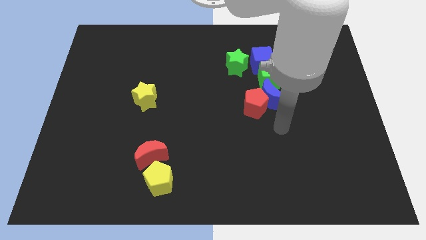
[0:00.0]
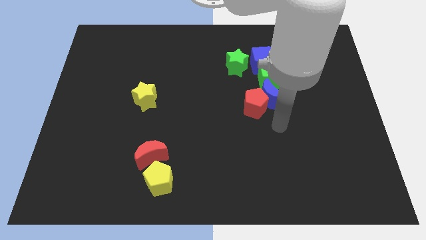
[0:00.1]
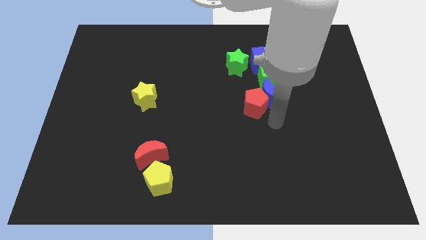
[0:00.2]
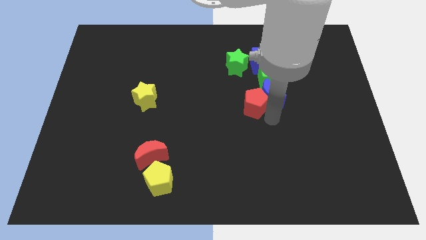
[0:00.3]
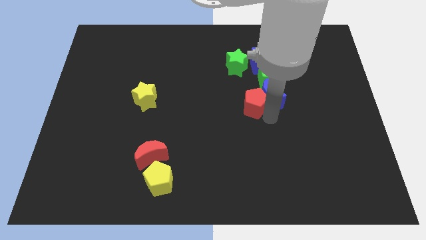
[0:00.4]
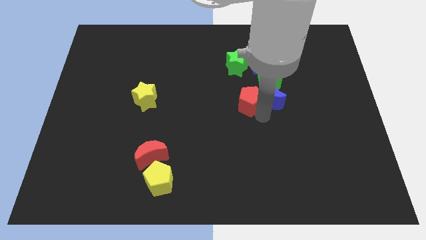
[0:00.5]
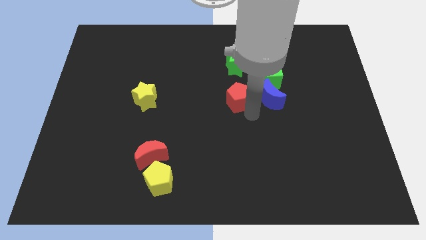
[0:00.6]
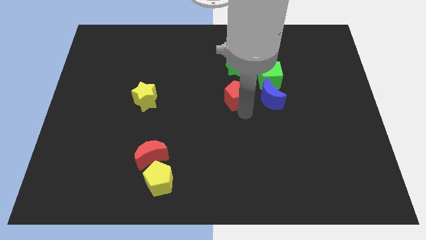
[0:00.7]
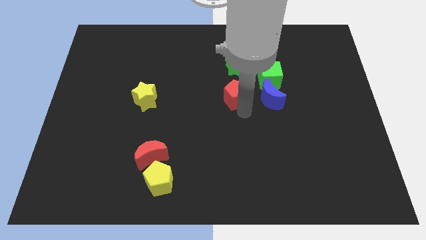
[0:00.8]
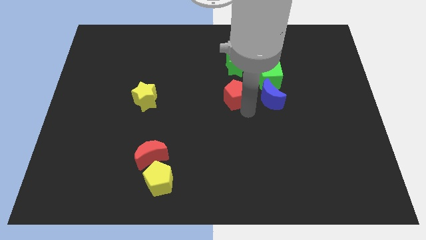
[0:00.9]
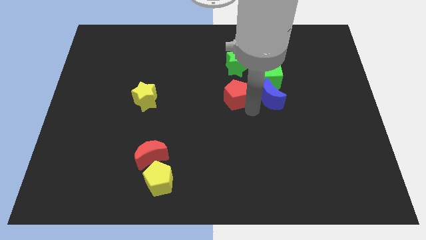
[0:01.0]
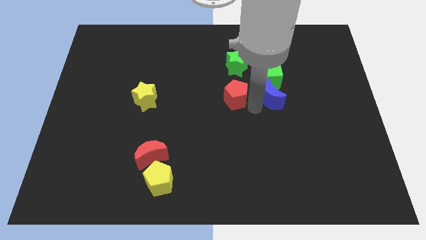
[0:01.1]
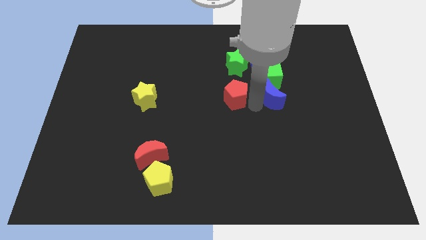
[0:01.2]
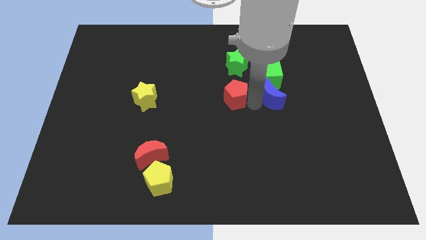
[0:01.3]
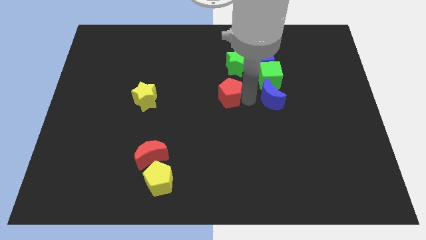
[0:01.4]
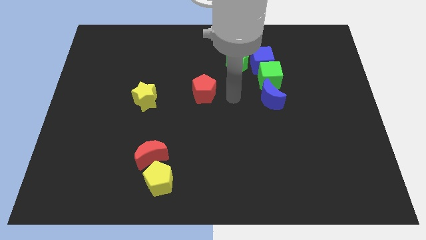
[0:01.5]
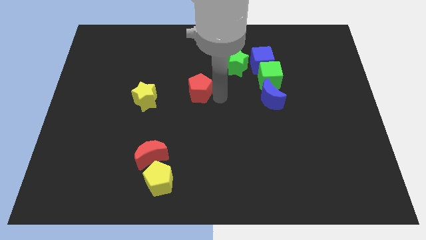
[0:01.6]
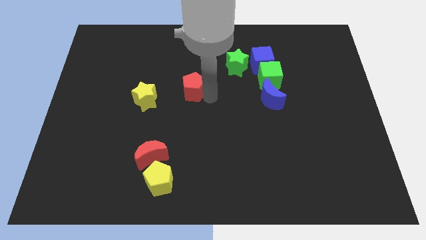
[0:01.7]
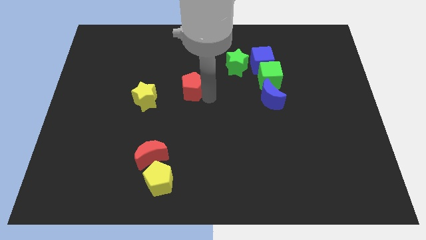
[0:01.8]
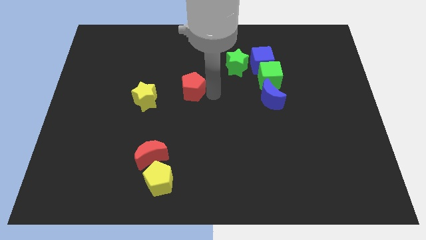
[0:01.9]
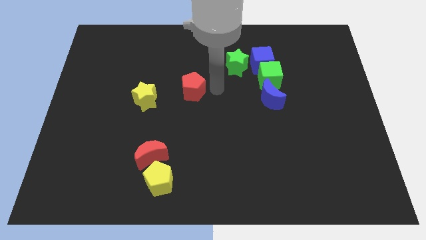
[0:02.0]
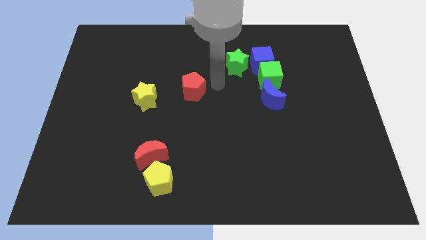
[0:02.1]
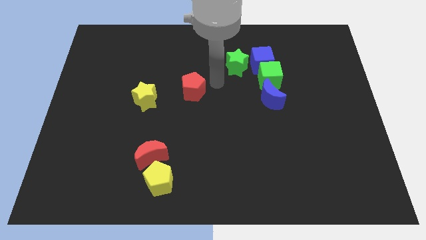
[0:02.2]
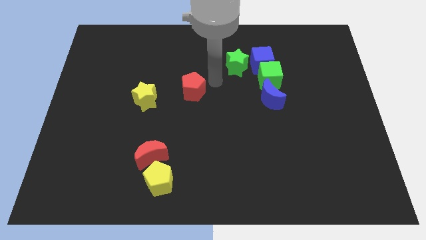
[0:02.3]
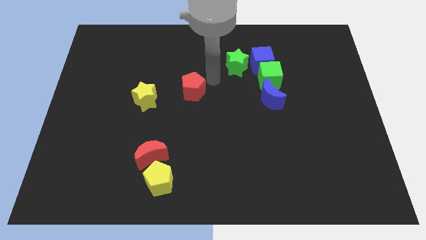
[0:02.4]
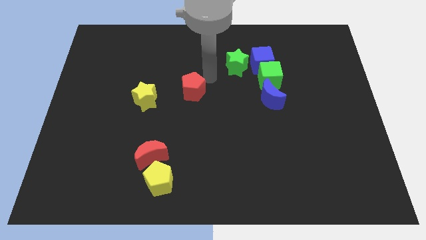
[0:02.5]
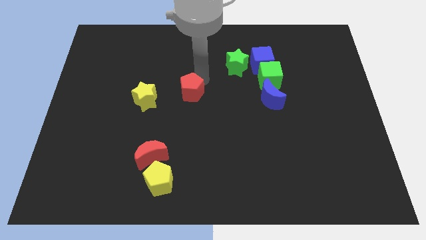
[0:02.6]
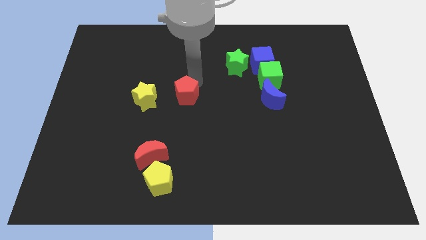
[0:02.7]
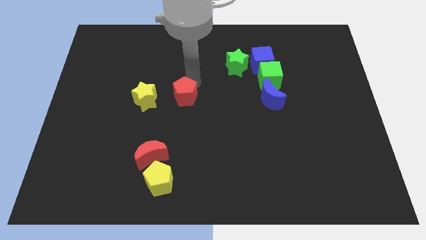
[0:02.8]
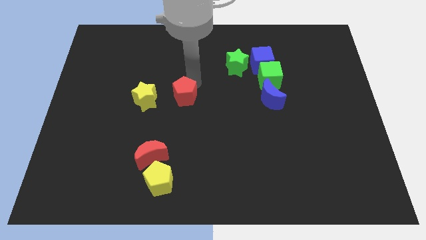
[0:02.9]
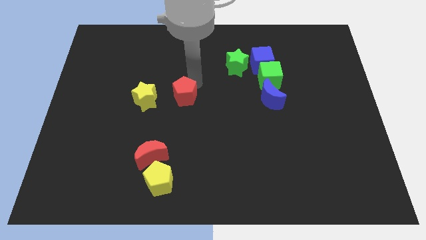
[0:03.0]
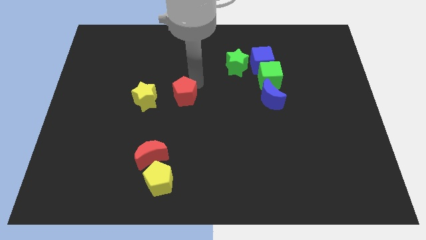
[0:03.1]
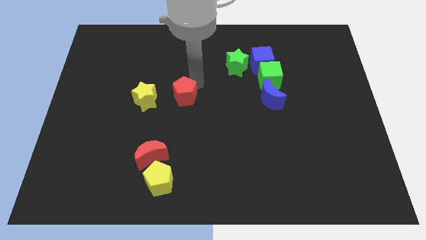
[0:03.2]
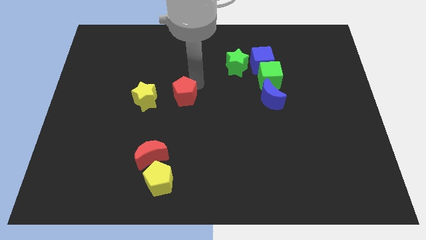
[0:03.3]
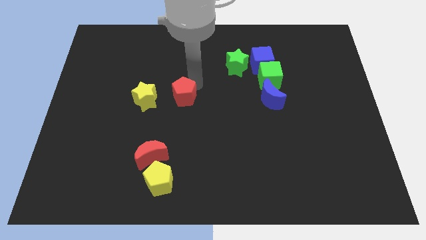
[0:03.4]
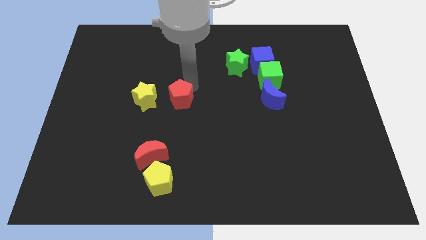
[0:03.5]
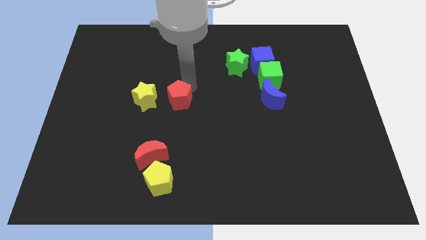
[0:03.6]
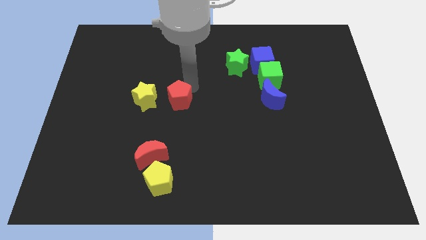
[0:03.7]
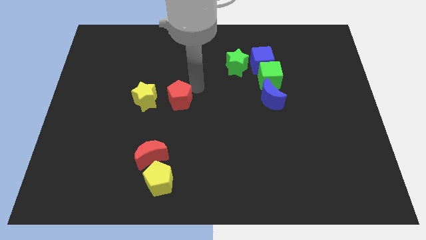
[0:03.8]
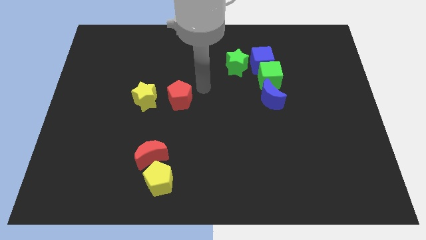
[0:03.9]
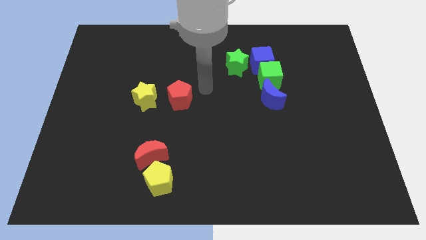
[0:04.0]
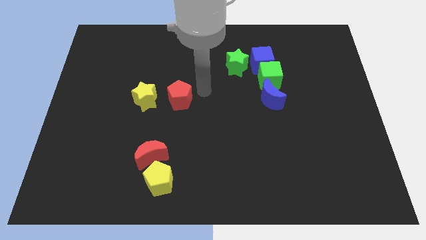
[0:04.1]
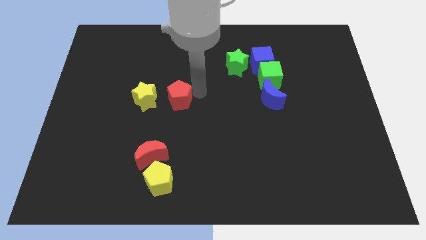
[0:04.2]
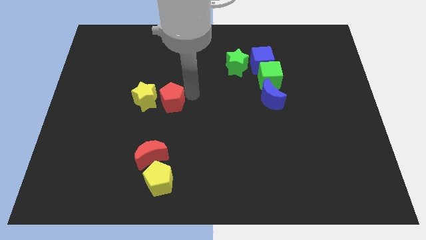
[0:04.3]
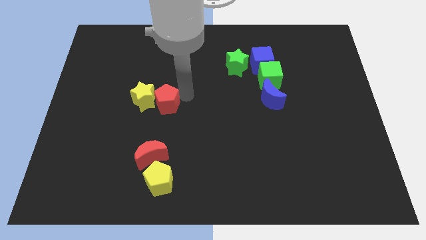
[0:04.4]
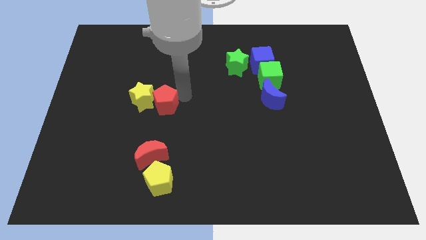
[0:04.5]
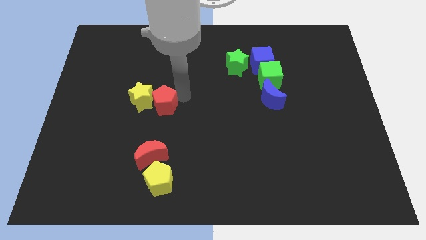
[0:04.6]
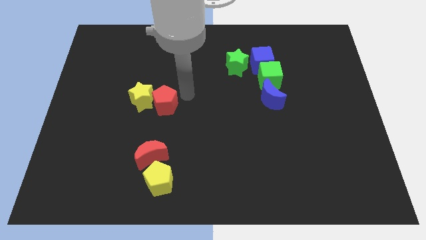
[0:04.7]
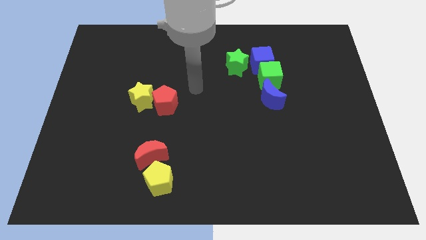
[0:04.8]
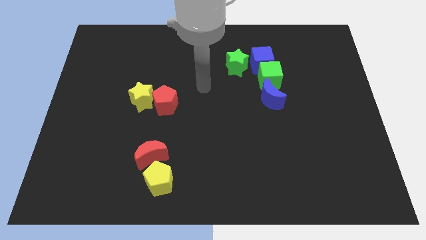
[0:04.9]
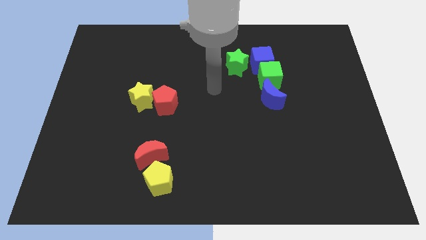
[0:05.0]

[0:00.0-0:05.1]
push the red pentagon to the right of the yellow pentagon

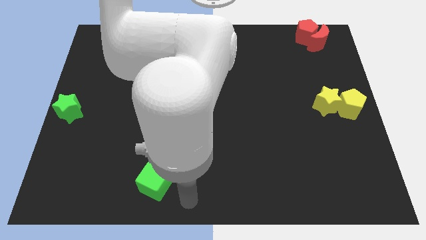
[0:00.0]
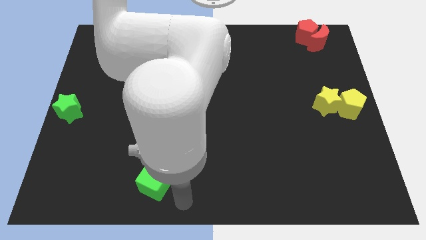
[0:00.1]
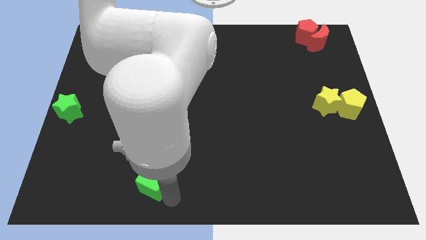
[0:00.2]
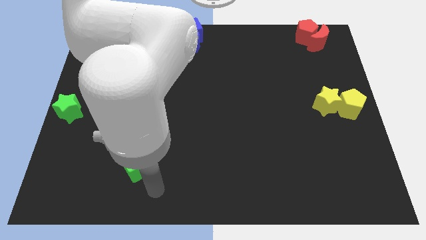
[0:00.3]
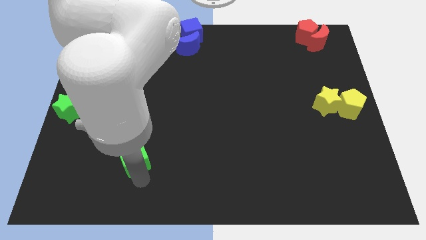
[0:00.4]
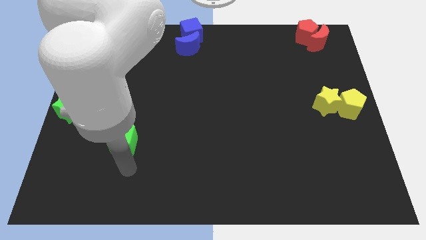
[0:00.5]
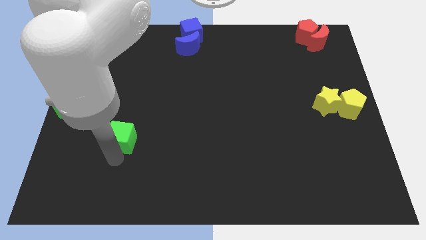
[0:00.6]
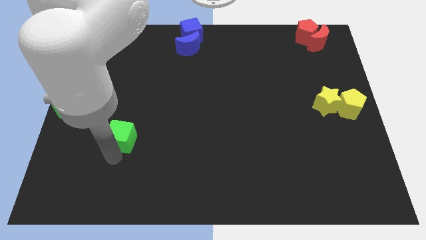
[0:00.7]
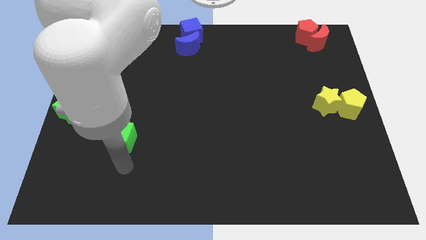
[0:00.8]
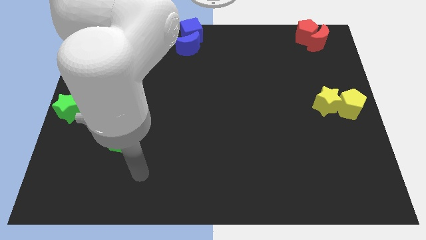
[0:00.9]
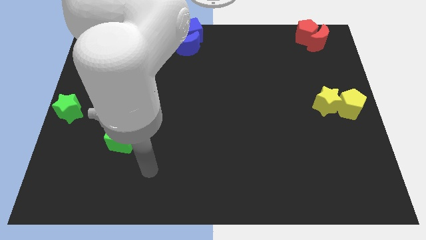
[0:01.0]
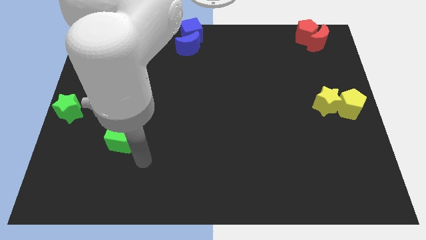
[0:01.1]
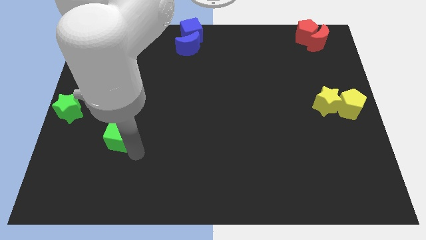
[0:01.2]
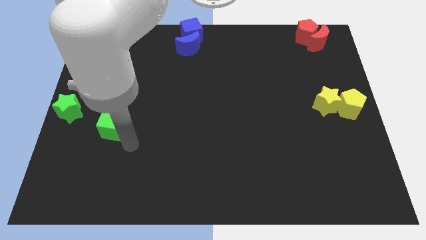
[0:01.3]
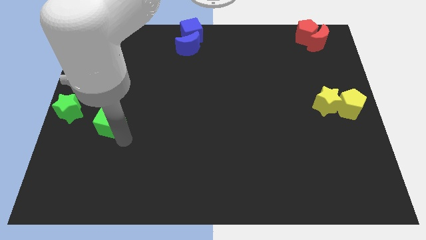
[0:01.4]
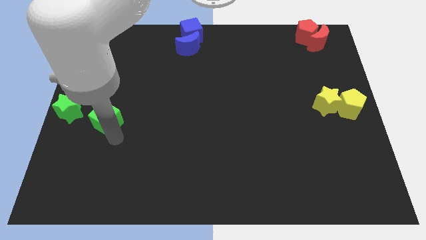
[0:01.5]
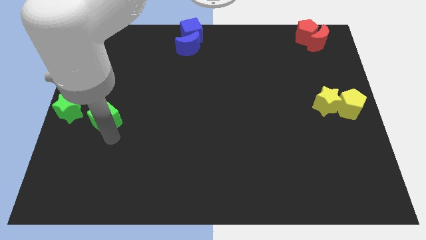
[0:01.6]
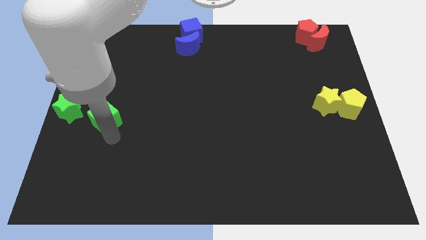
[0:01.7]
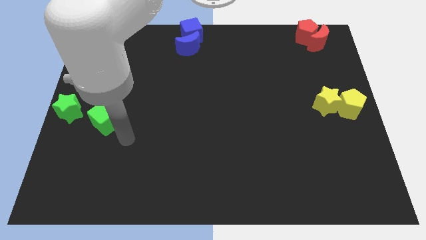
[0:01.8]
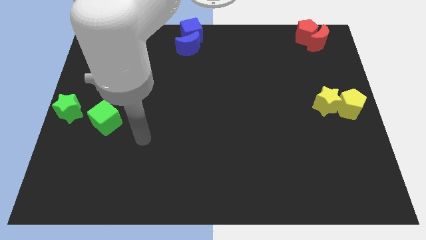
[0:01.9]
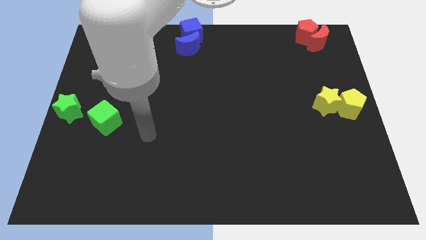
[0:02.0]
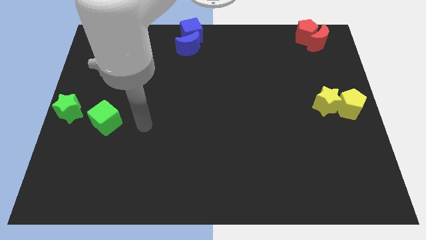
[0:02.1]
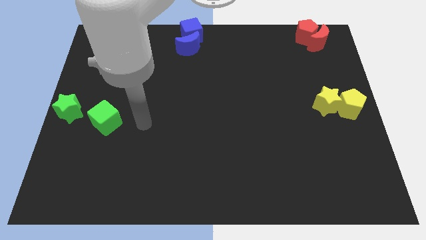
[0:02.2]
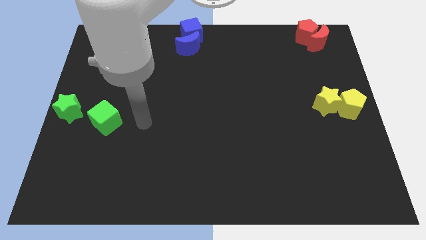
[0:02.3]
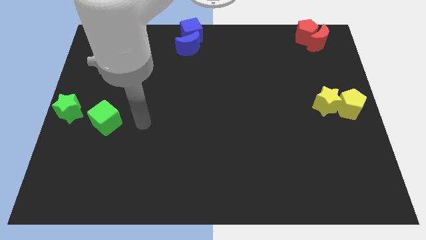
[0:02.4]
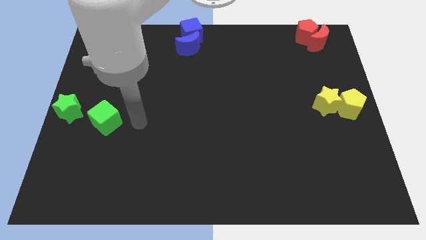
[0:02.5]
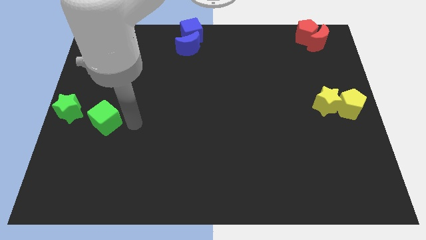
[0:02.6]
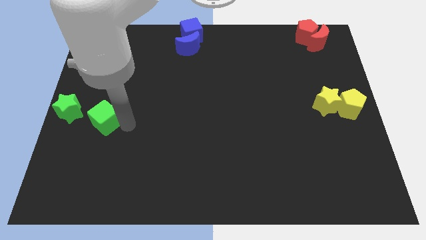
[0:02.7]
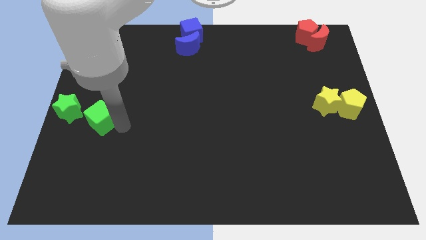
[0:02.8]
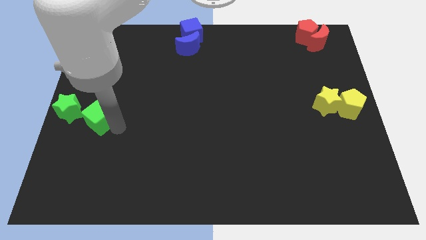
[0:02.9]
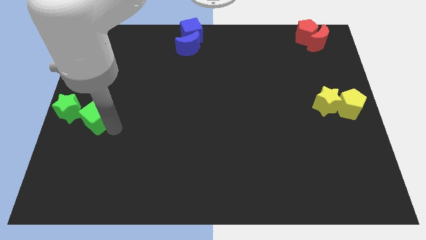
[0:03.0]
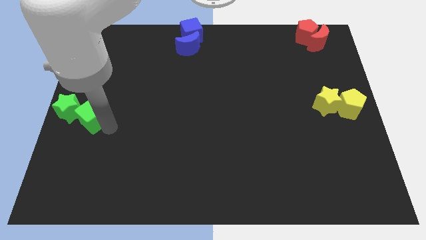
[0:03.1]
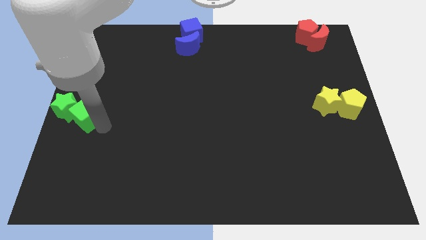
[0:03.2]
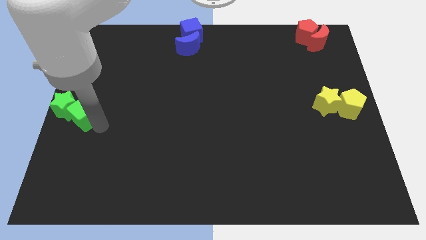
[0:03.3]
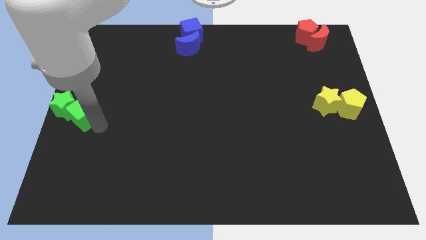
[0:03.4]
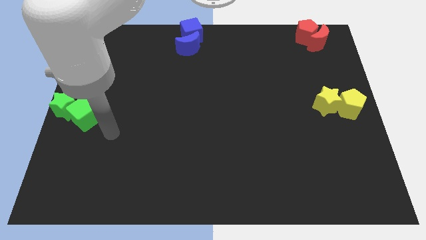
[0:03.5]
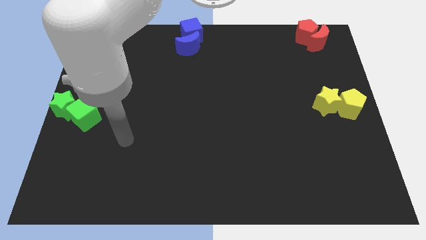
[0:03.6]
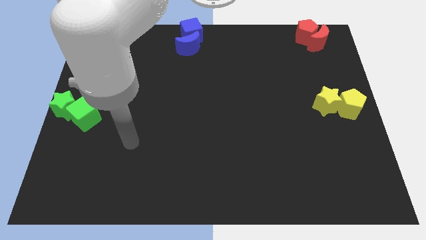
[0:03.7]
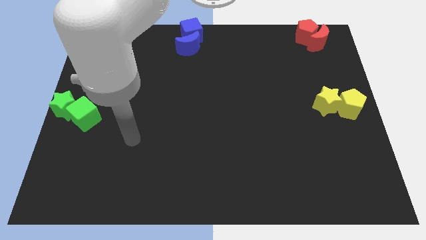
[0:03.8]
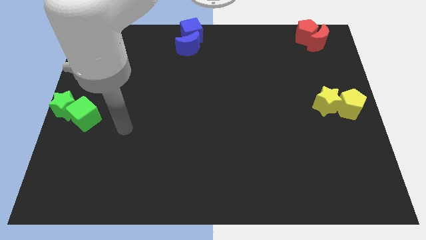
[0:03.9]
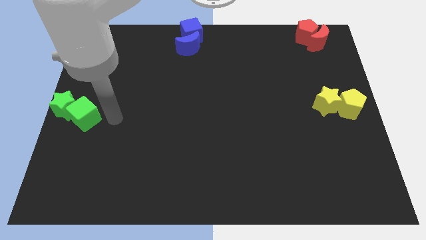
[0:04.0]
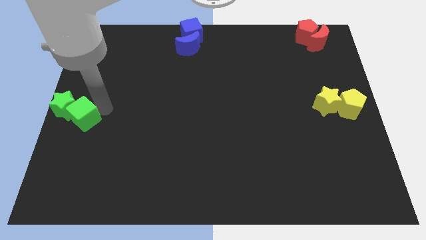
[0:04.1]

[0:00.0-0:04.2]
push the green cube into the green star
